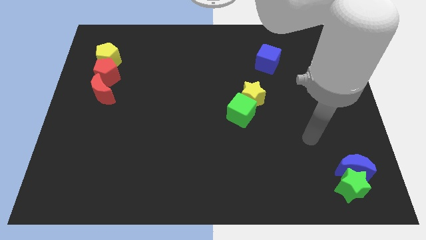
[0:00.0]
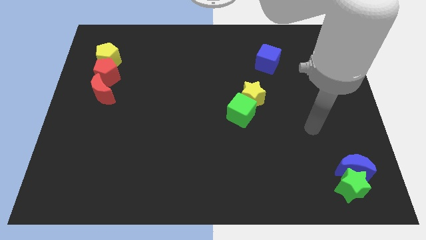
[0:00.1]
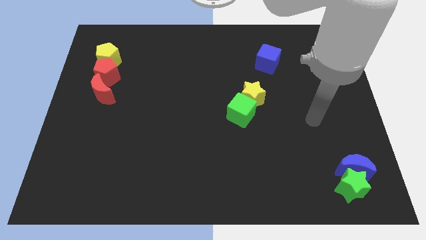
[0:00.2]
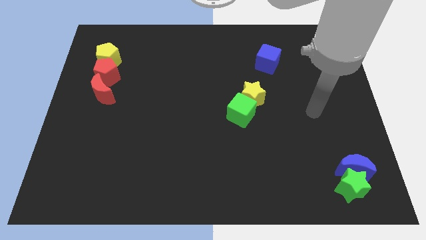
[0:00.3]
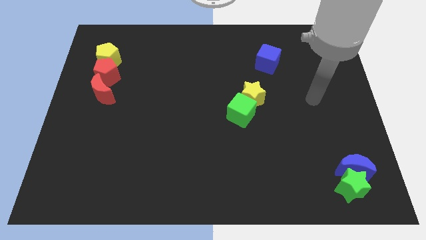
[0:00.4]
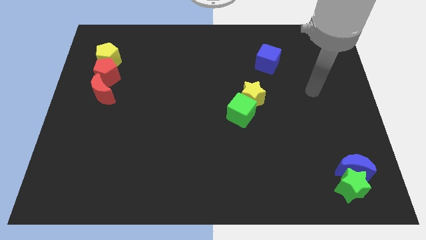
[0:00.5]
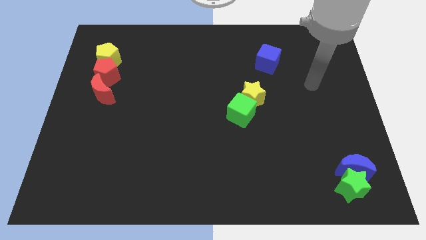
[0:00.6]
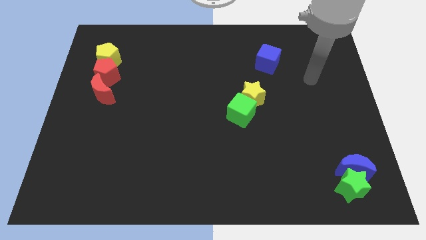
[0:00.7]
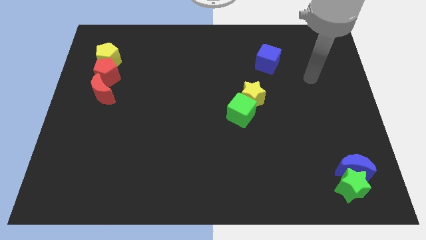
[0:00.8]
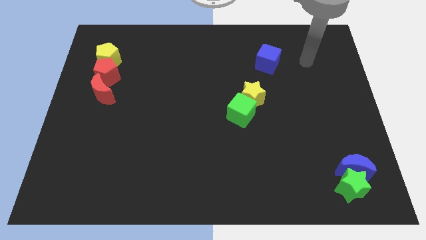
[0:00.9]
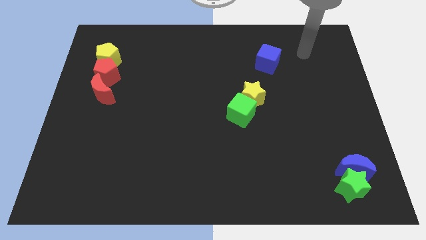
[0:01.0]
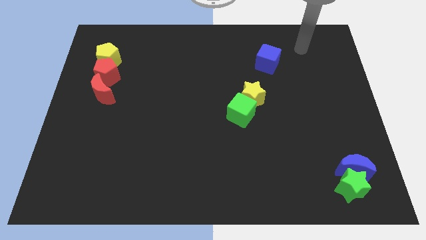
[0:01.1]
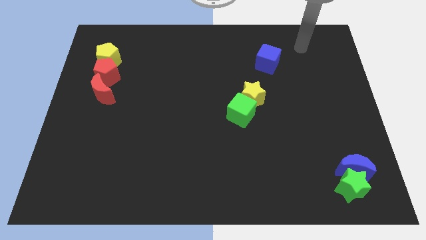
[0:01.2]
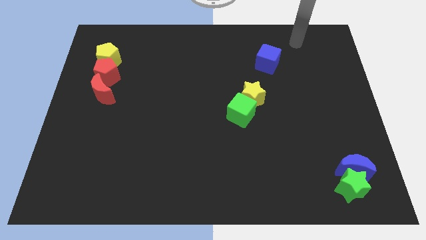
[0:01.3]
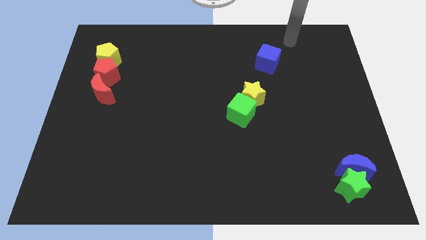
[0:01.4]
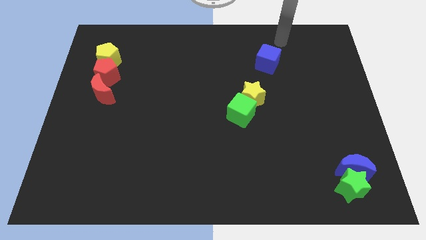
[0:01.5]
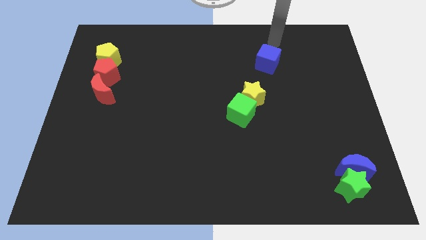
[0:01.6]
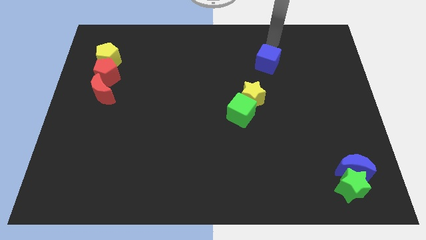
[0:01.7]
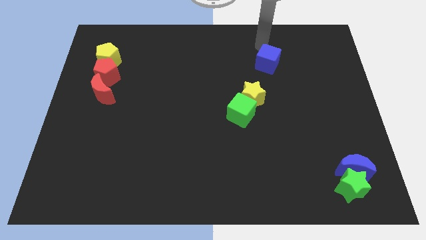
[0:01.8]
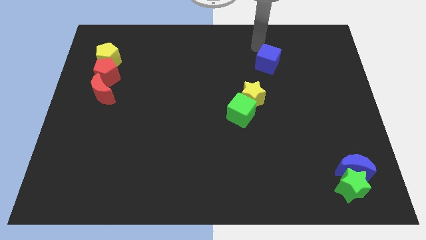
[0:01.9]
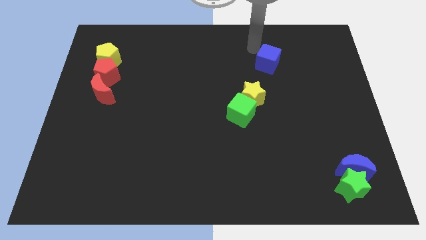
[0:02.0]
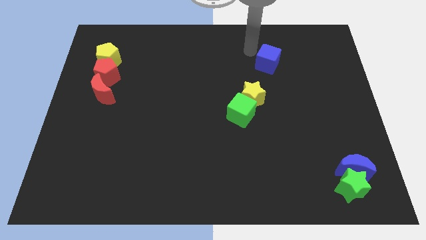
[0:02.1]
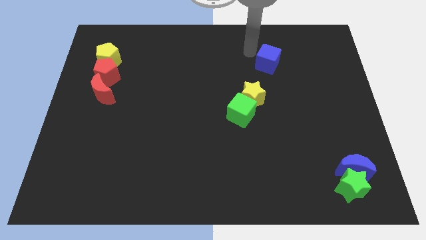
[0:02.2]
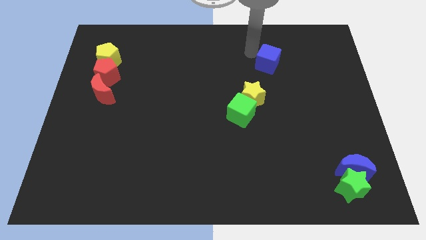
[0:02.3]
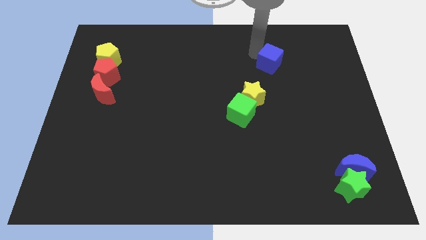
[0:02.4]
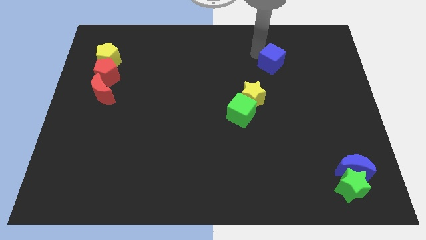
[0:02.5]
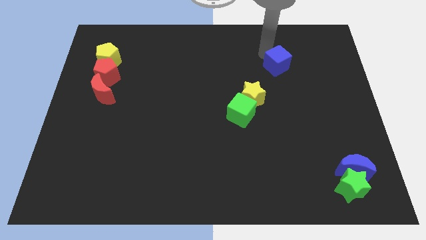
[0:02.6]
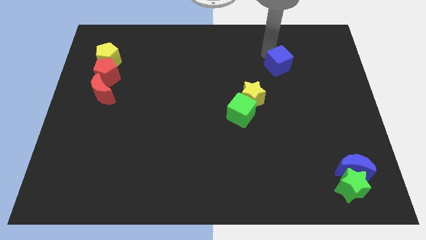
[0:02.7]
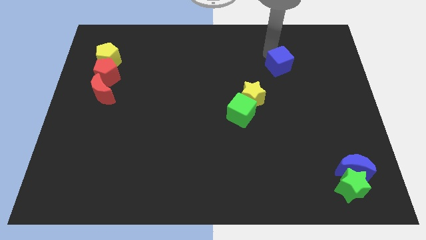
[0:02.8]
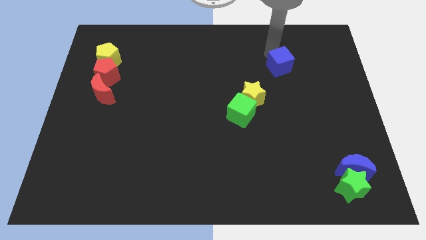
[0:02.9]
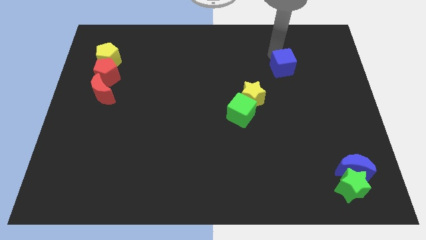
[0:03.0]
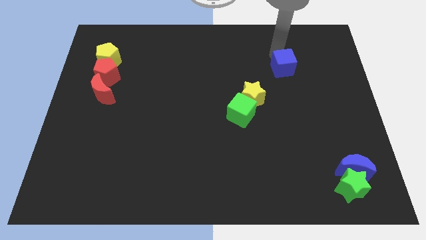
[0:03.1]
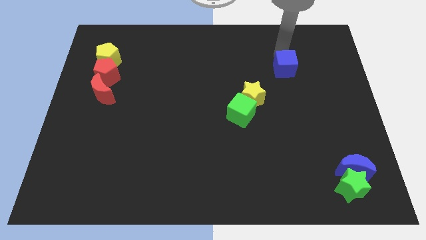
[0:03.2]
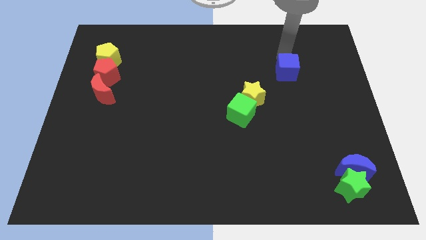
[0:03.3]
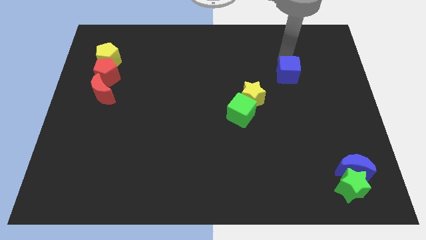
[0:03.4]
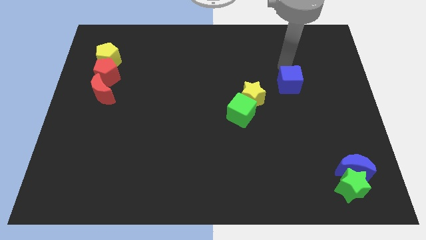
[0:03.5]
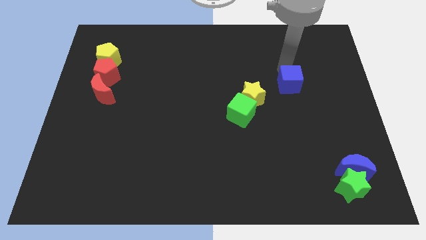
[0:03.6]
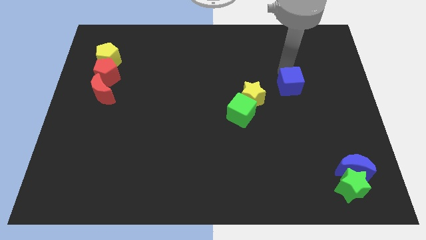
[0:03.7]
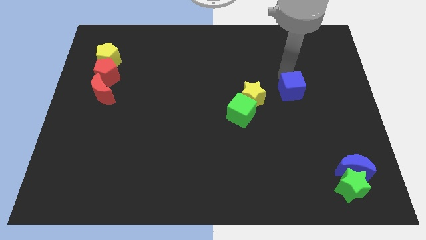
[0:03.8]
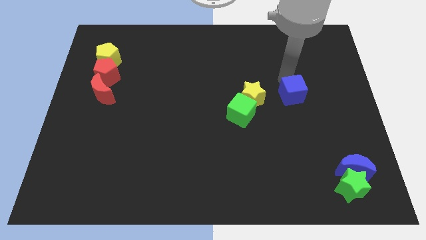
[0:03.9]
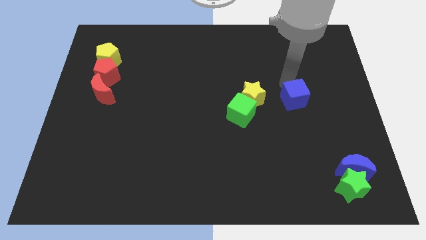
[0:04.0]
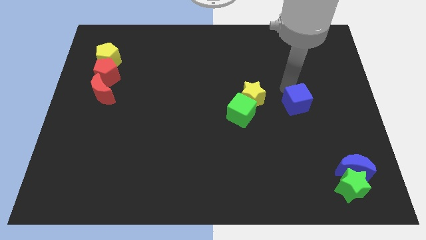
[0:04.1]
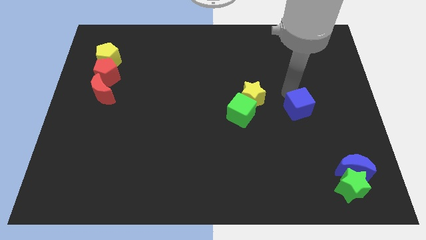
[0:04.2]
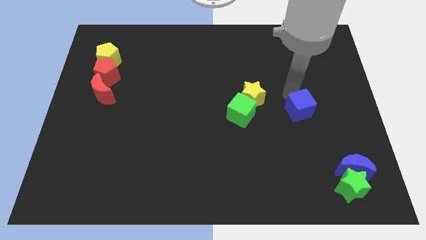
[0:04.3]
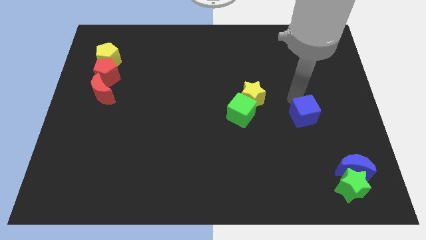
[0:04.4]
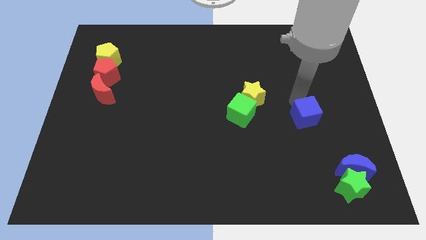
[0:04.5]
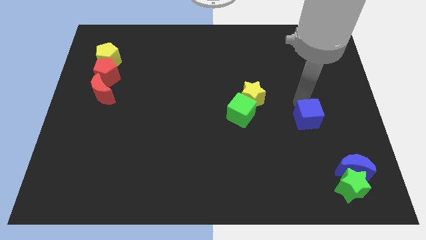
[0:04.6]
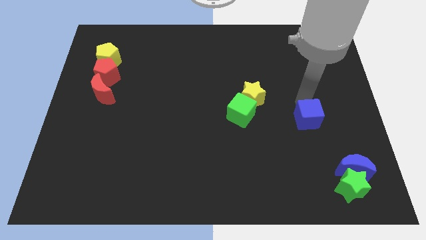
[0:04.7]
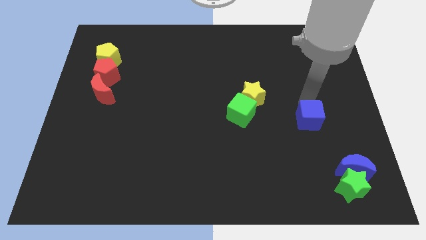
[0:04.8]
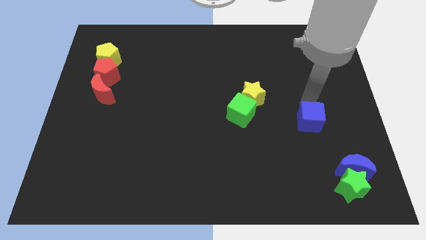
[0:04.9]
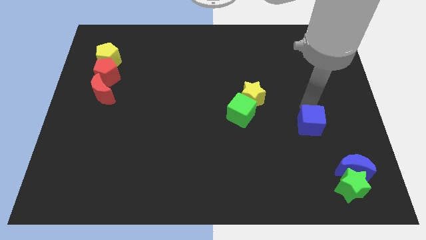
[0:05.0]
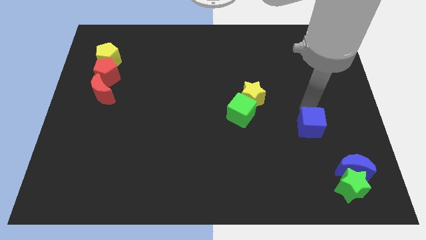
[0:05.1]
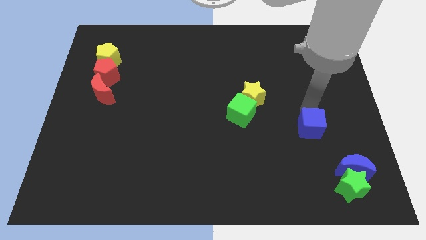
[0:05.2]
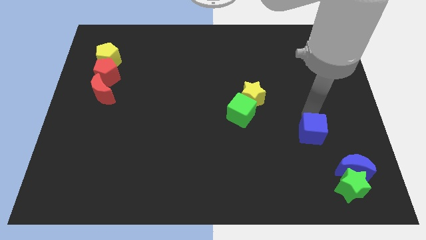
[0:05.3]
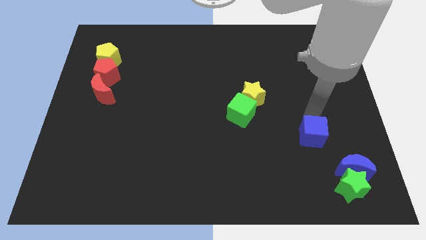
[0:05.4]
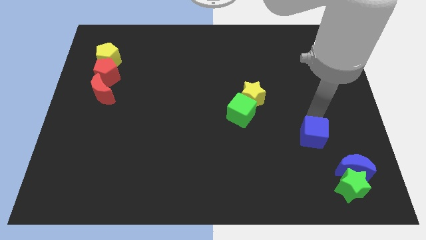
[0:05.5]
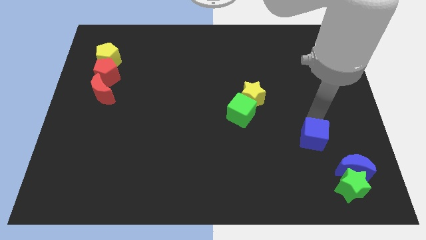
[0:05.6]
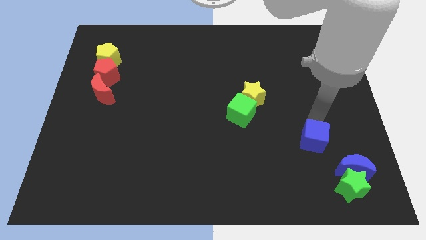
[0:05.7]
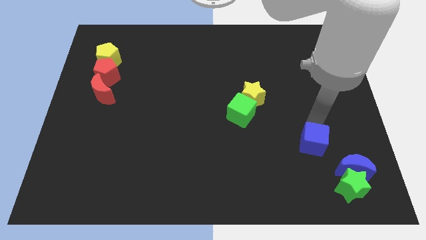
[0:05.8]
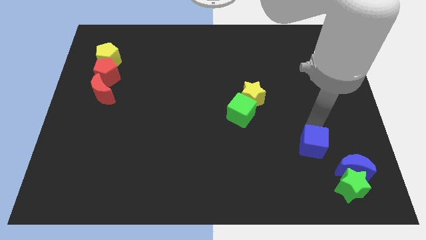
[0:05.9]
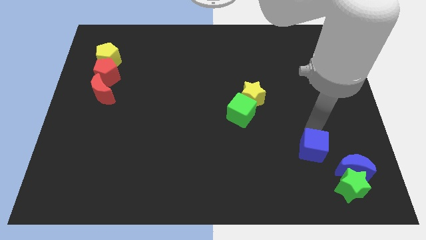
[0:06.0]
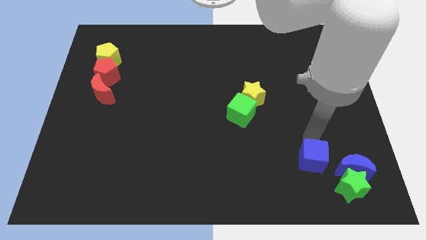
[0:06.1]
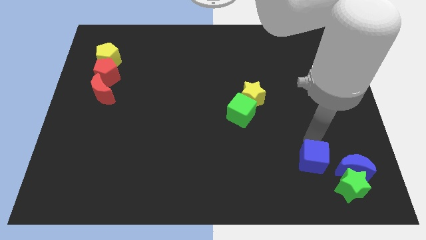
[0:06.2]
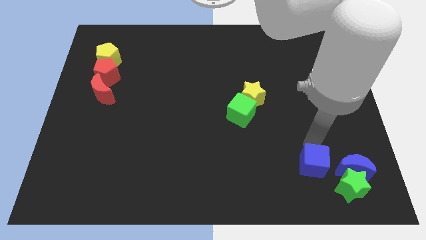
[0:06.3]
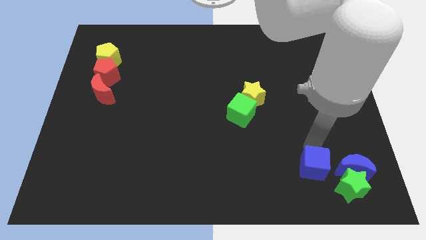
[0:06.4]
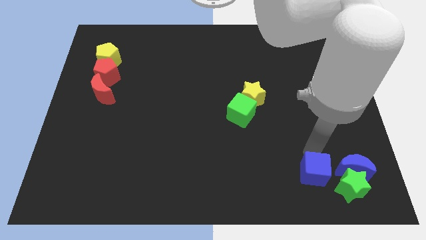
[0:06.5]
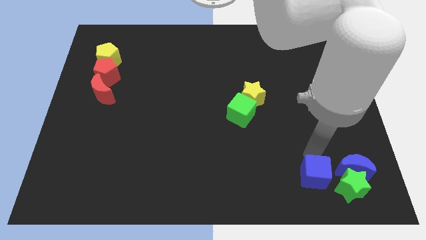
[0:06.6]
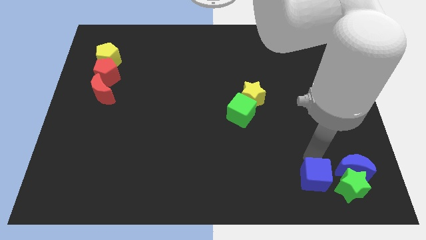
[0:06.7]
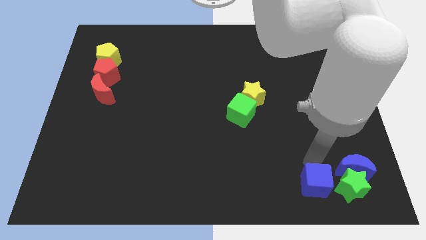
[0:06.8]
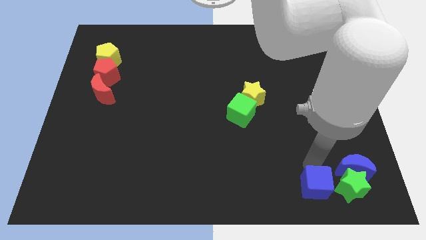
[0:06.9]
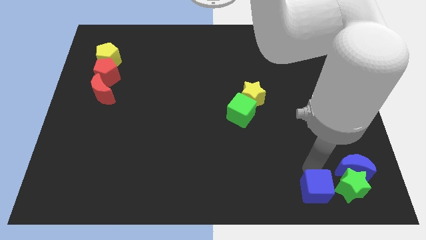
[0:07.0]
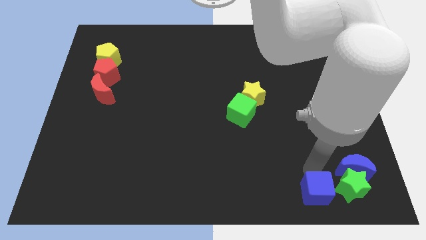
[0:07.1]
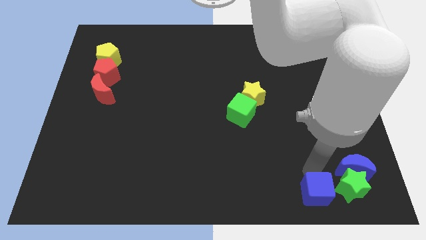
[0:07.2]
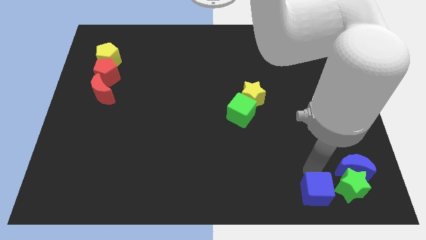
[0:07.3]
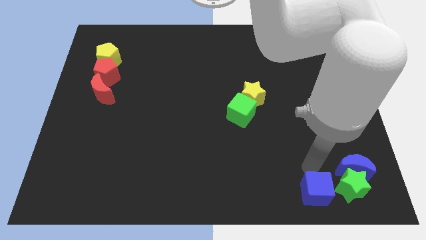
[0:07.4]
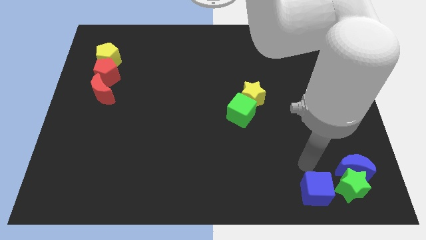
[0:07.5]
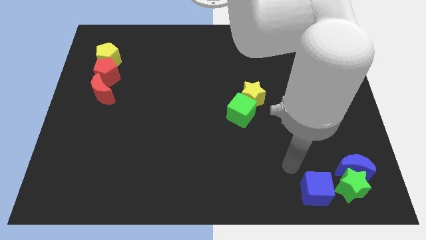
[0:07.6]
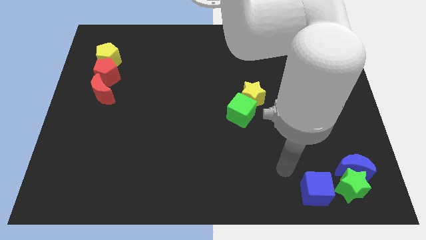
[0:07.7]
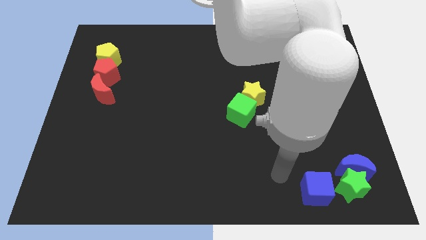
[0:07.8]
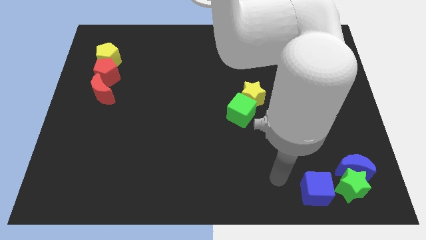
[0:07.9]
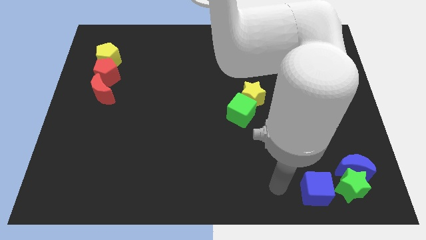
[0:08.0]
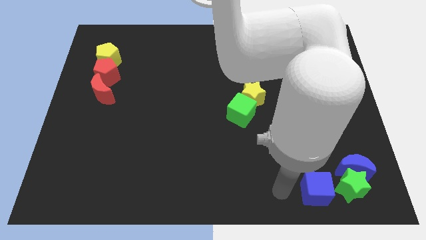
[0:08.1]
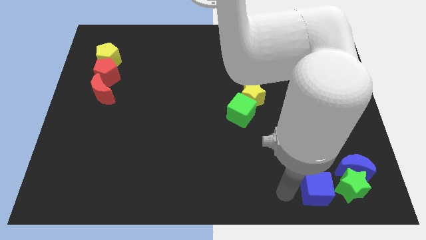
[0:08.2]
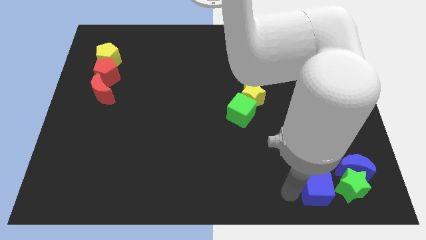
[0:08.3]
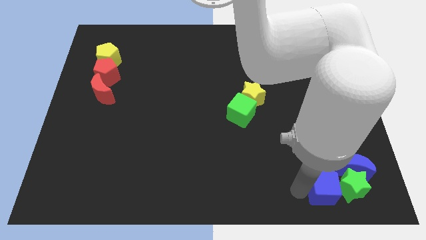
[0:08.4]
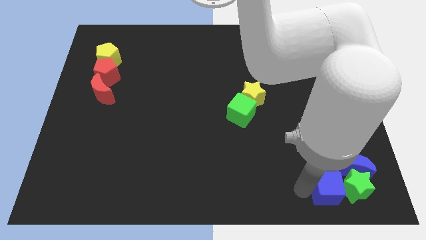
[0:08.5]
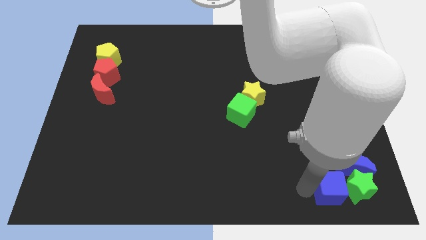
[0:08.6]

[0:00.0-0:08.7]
move the blue cube towards the green star
